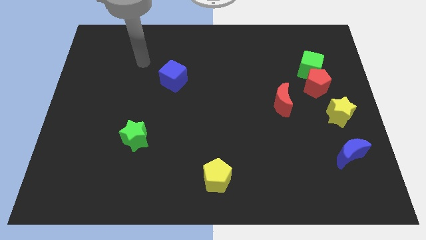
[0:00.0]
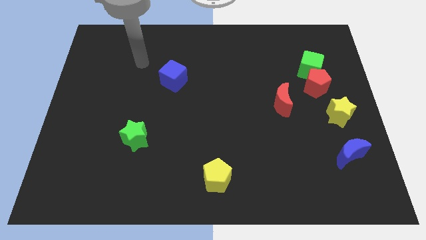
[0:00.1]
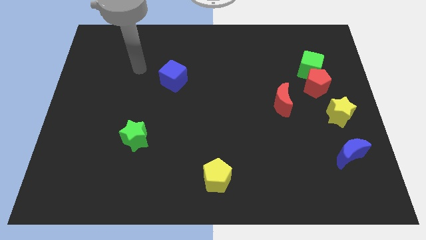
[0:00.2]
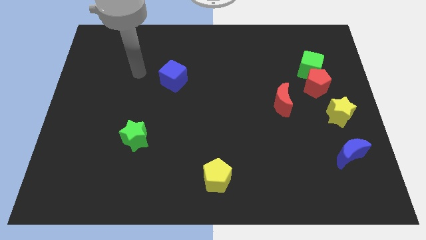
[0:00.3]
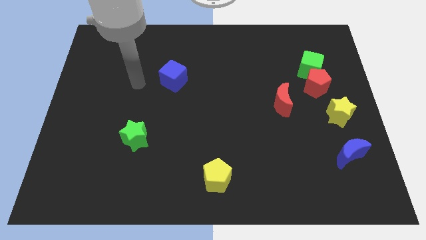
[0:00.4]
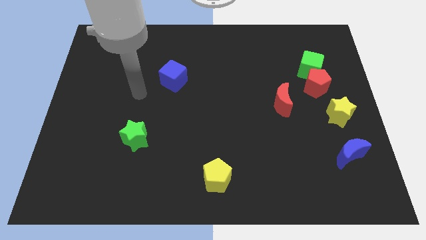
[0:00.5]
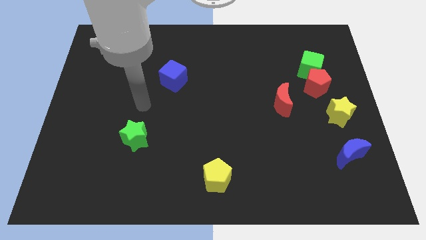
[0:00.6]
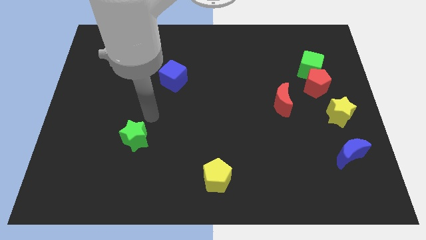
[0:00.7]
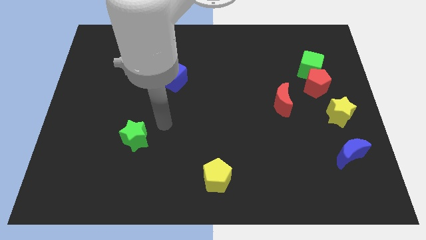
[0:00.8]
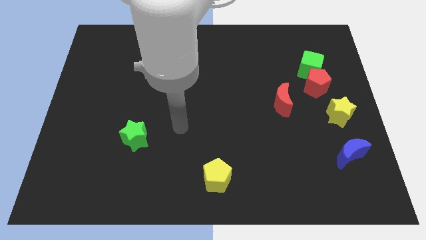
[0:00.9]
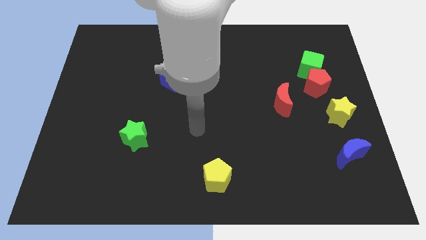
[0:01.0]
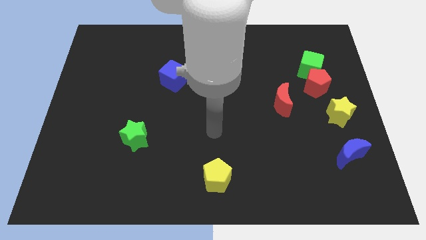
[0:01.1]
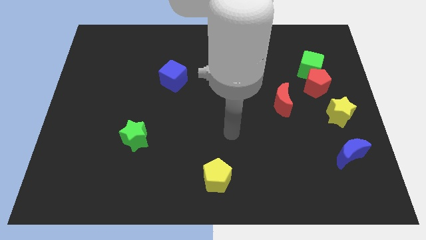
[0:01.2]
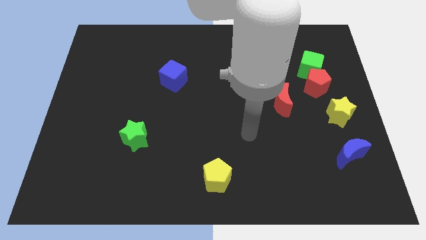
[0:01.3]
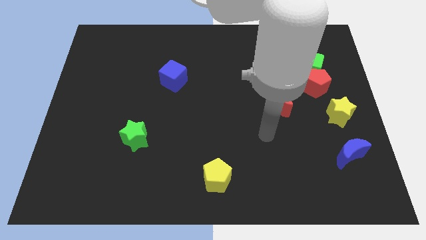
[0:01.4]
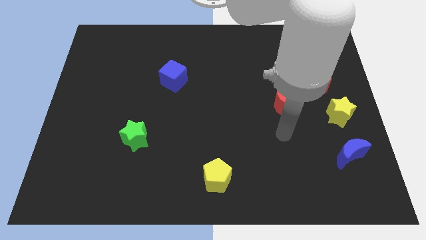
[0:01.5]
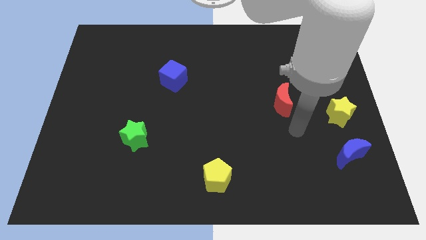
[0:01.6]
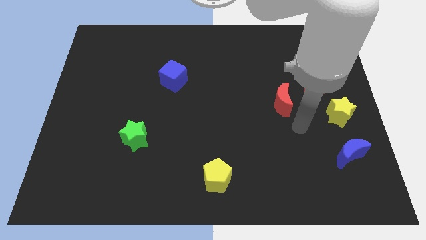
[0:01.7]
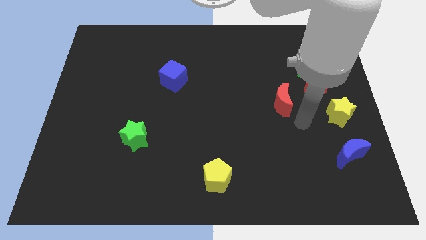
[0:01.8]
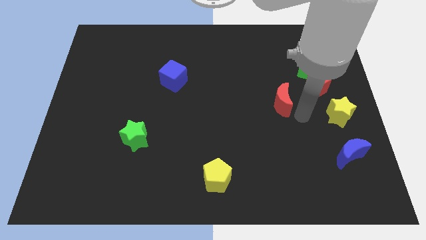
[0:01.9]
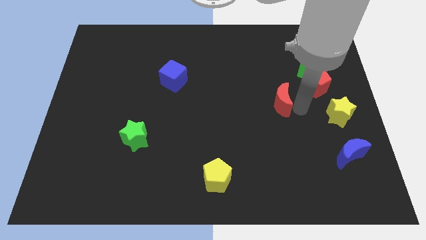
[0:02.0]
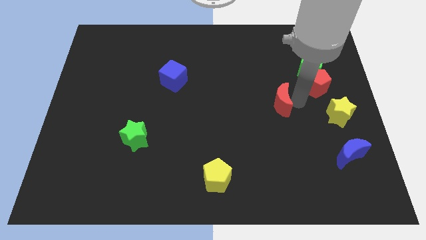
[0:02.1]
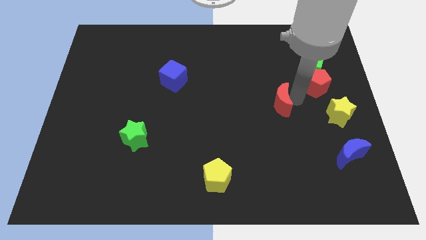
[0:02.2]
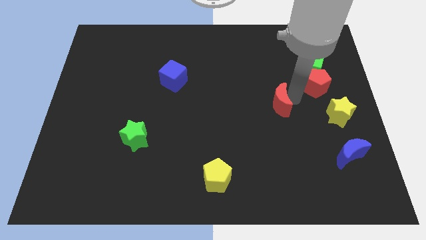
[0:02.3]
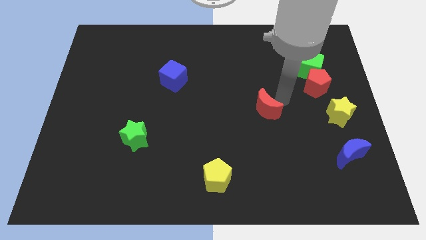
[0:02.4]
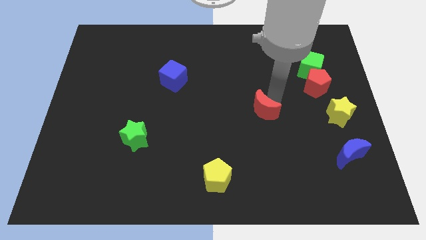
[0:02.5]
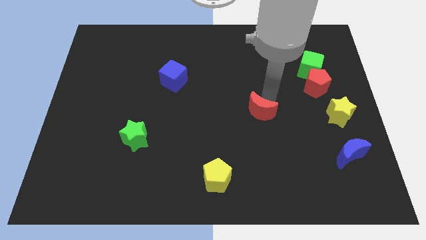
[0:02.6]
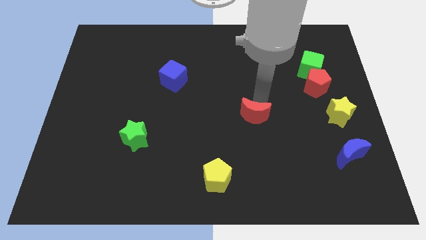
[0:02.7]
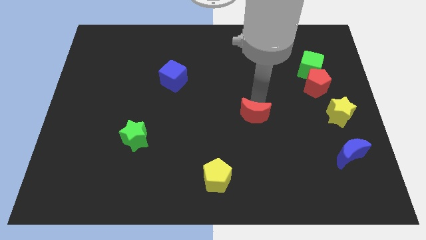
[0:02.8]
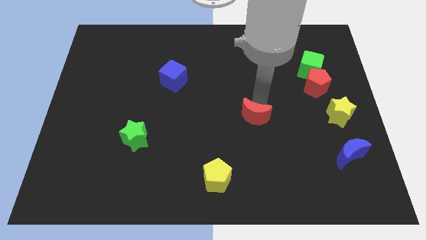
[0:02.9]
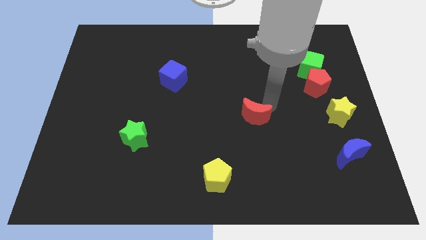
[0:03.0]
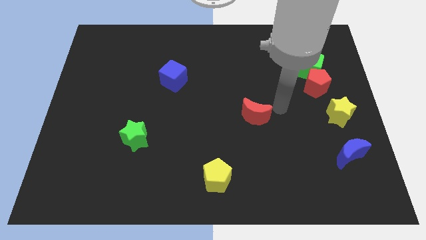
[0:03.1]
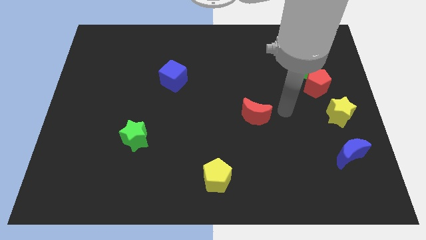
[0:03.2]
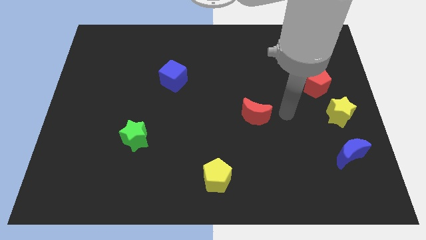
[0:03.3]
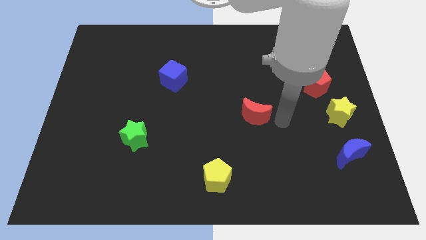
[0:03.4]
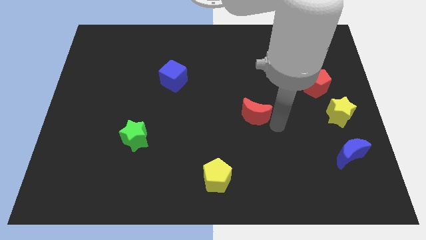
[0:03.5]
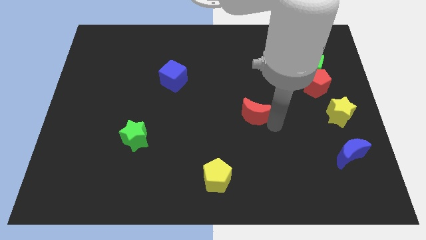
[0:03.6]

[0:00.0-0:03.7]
move the red crescent parallel left to the yellow star

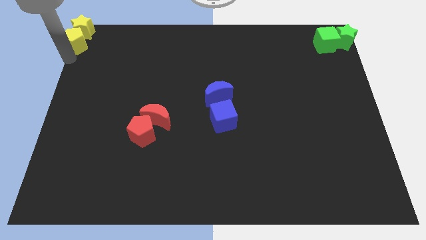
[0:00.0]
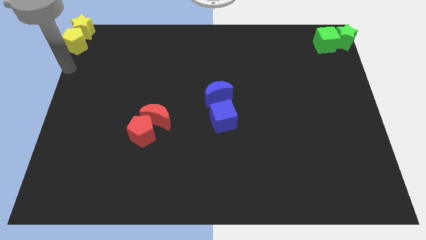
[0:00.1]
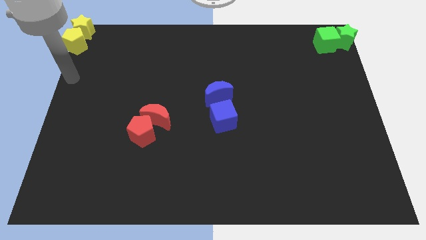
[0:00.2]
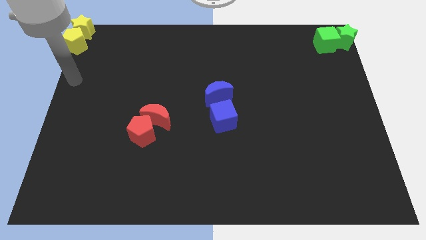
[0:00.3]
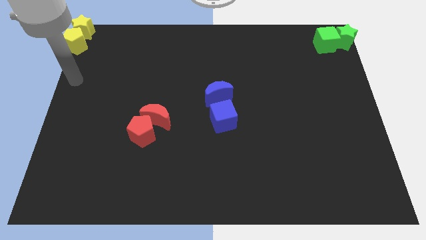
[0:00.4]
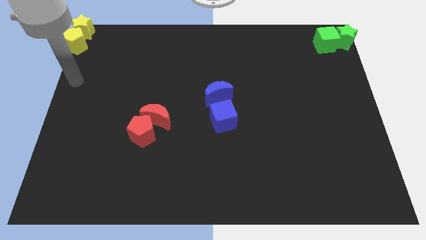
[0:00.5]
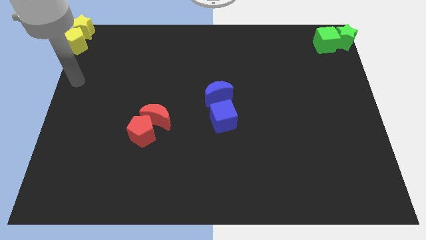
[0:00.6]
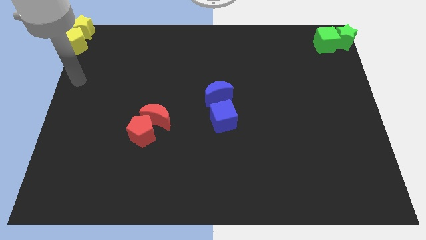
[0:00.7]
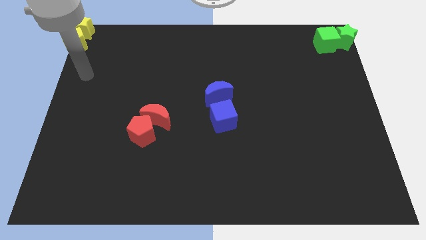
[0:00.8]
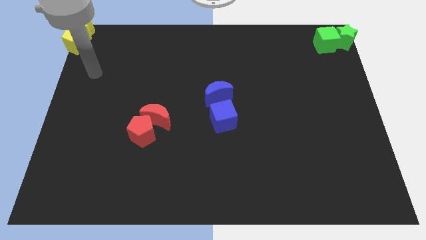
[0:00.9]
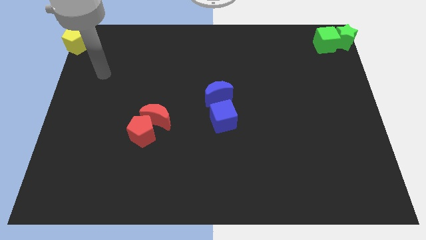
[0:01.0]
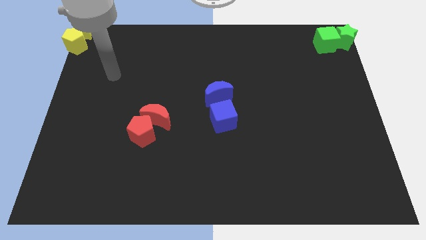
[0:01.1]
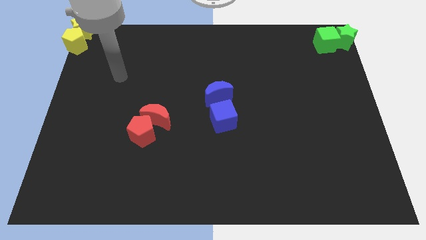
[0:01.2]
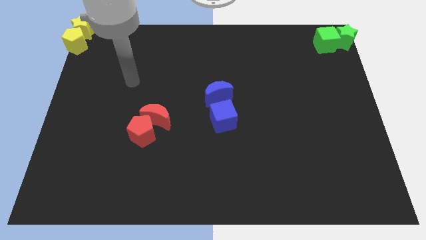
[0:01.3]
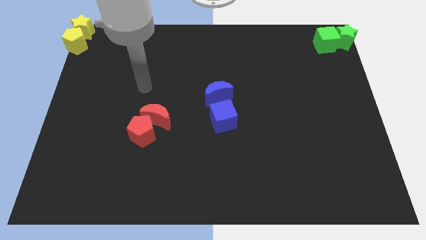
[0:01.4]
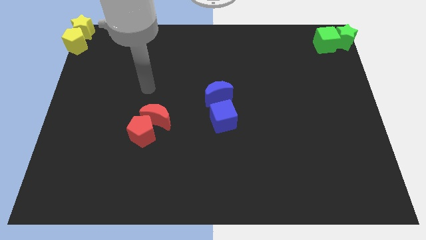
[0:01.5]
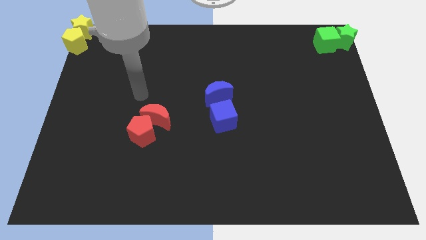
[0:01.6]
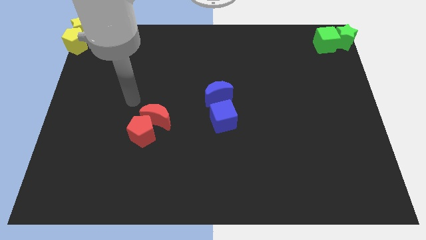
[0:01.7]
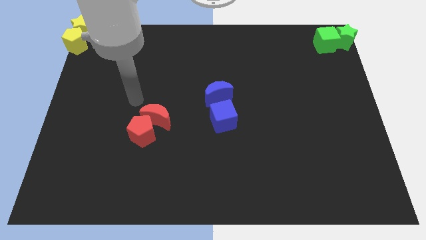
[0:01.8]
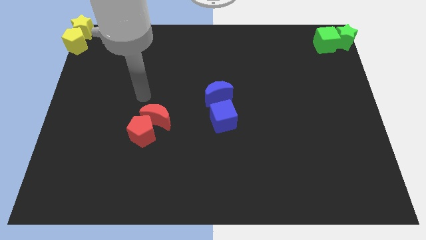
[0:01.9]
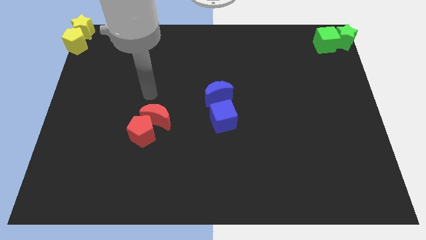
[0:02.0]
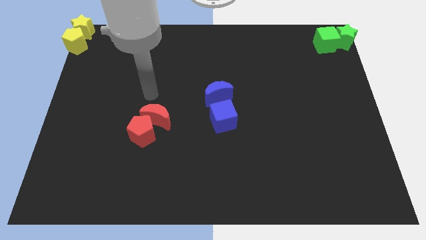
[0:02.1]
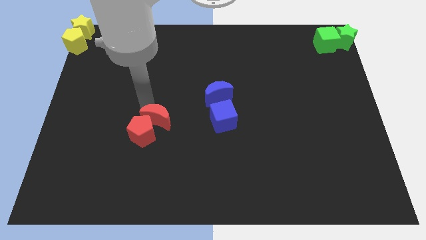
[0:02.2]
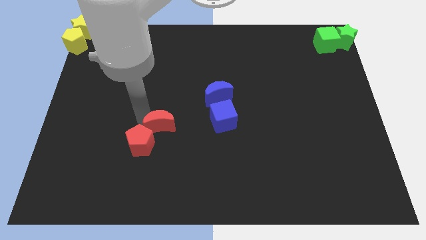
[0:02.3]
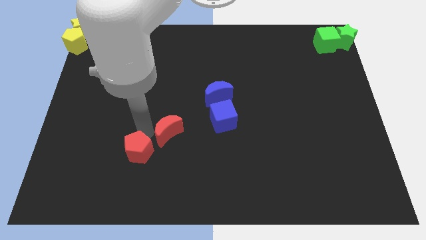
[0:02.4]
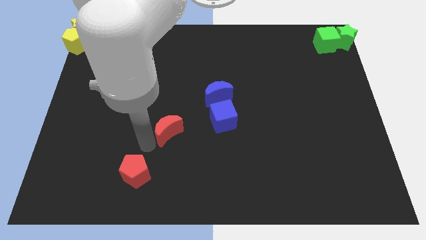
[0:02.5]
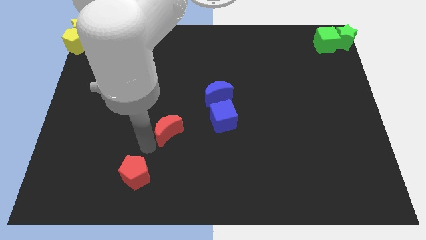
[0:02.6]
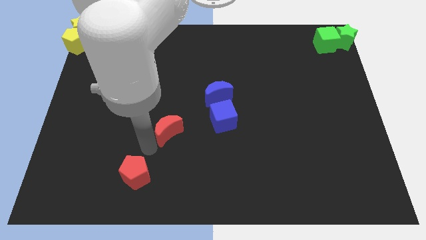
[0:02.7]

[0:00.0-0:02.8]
separate the red pentagon from red crescent

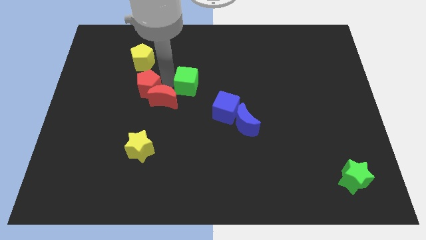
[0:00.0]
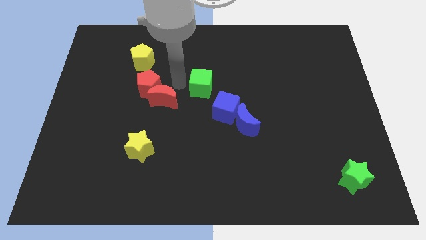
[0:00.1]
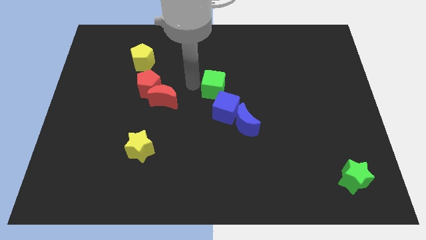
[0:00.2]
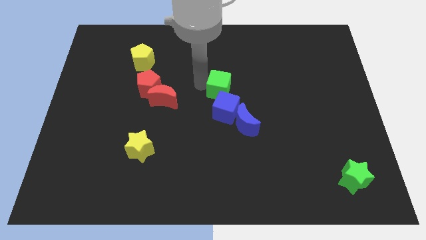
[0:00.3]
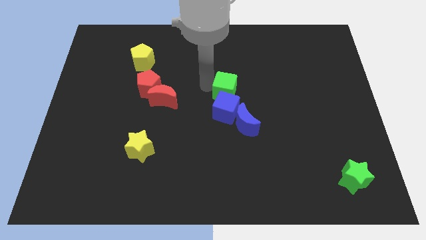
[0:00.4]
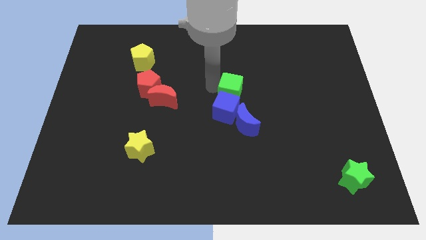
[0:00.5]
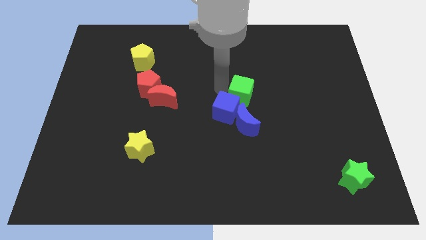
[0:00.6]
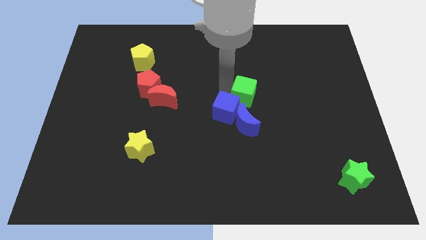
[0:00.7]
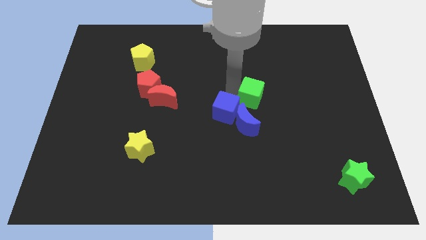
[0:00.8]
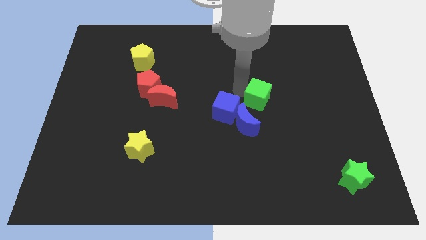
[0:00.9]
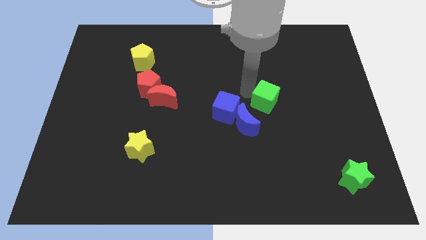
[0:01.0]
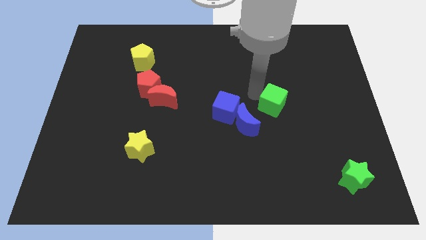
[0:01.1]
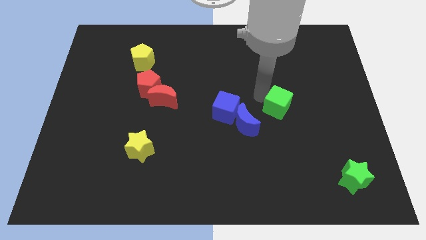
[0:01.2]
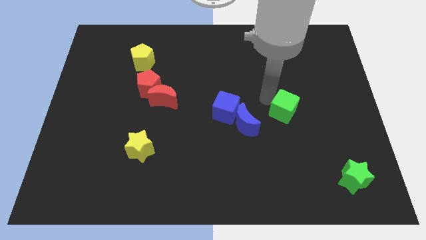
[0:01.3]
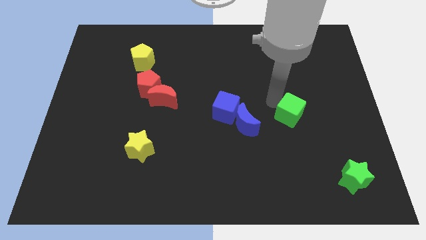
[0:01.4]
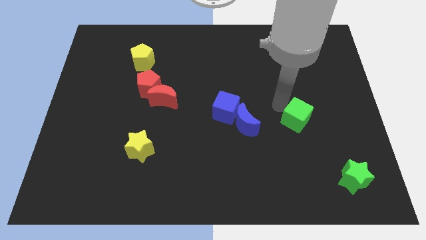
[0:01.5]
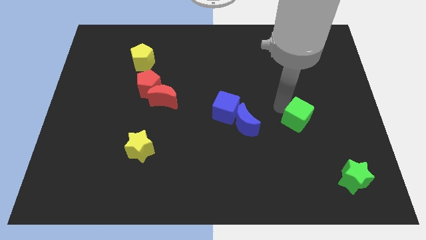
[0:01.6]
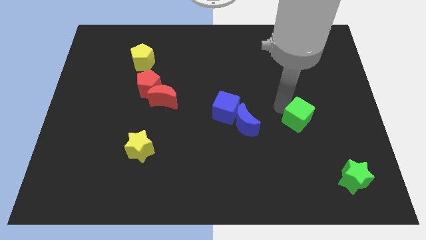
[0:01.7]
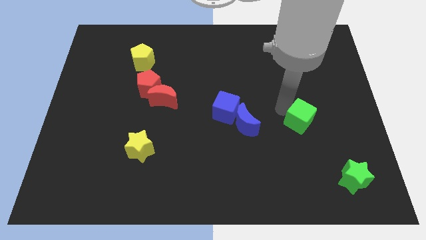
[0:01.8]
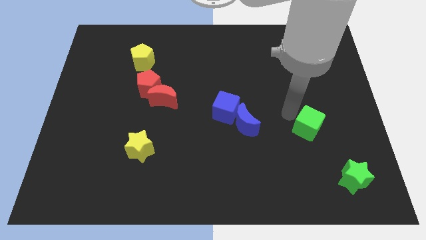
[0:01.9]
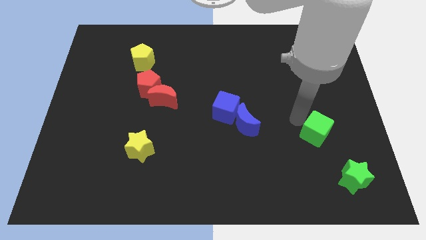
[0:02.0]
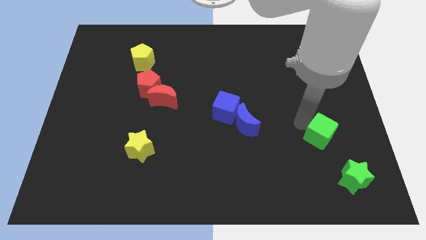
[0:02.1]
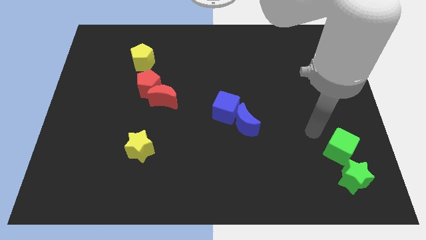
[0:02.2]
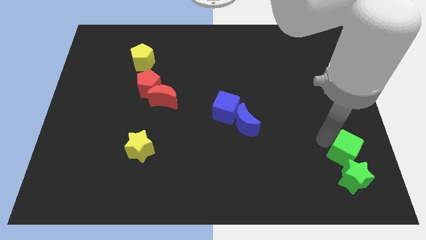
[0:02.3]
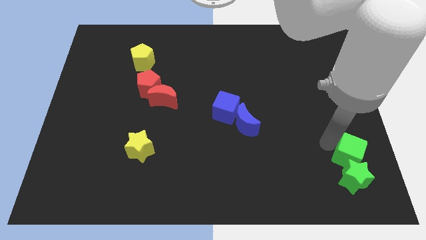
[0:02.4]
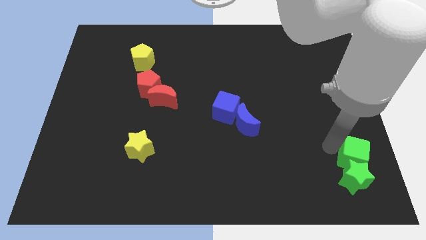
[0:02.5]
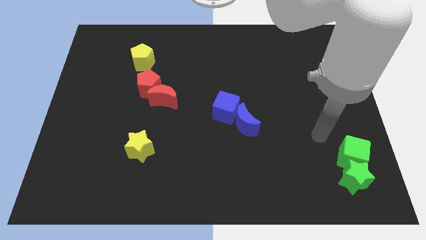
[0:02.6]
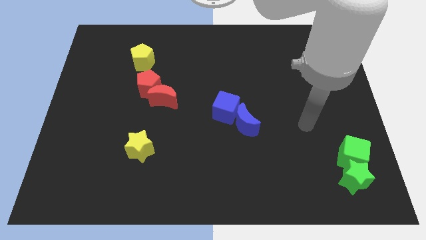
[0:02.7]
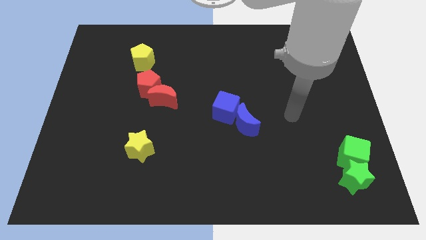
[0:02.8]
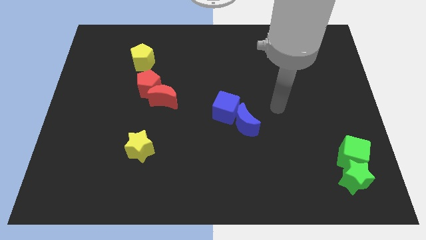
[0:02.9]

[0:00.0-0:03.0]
place the green cube above the green star
